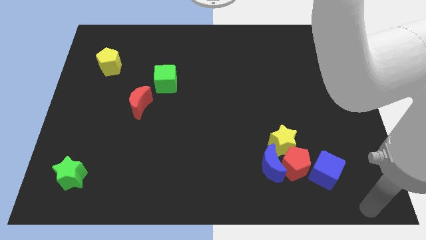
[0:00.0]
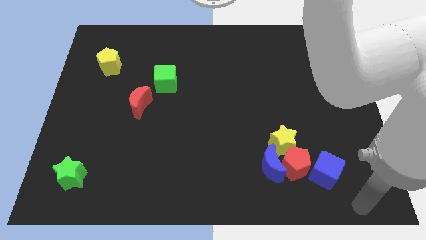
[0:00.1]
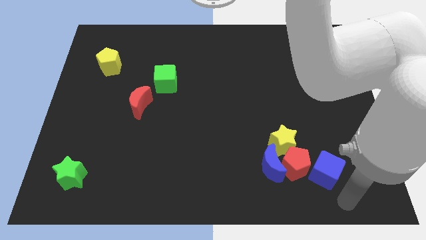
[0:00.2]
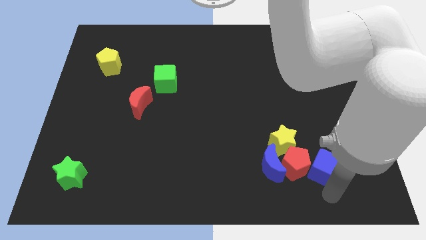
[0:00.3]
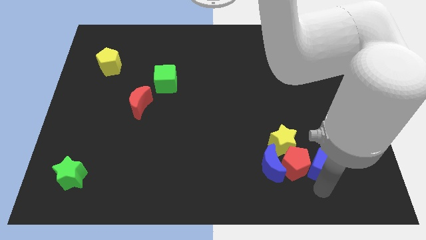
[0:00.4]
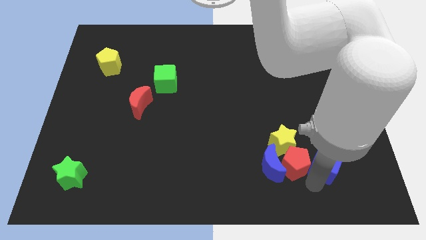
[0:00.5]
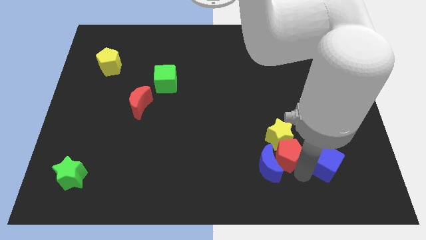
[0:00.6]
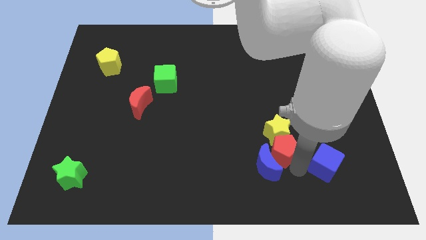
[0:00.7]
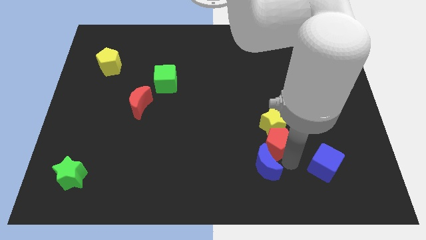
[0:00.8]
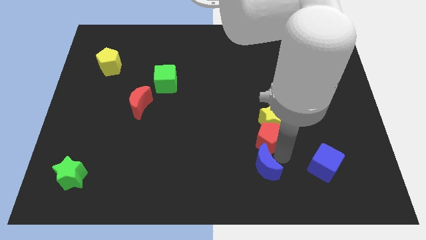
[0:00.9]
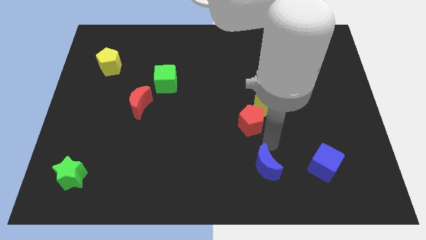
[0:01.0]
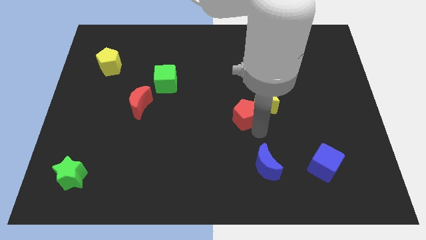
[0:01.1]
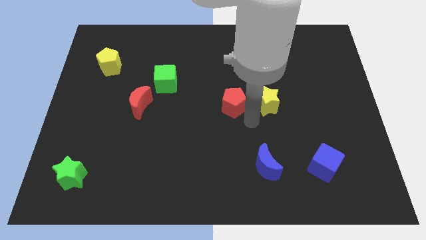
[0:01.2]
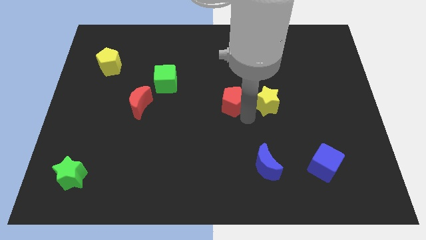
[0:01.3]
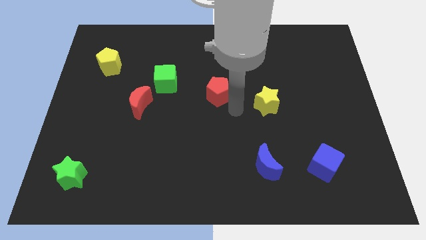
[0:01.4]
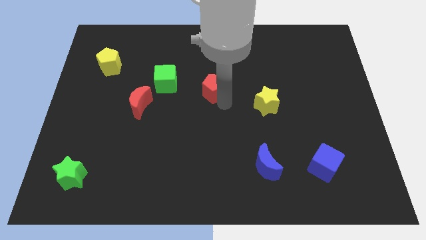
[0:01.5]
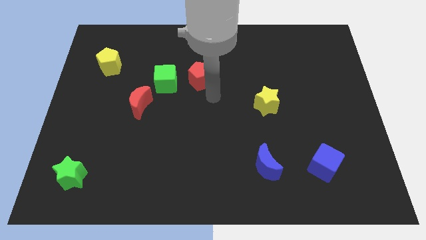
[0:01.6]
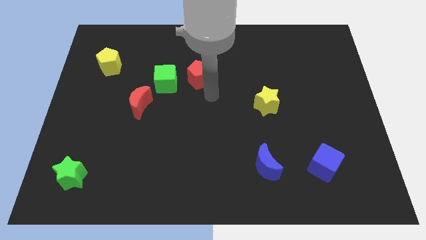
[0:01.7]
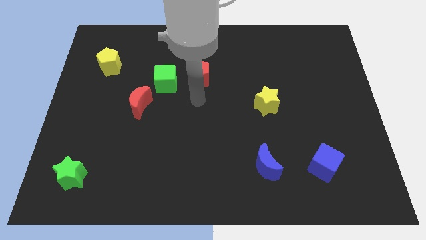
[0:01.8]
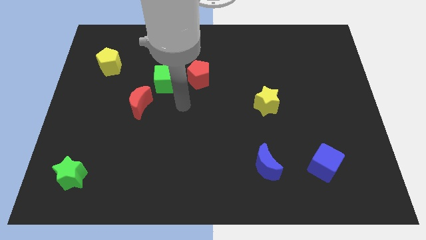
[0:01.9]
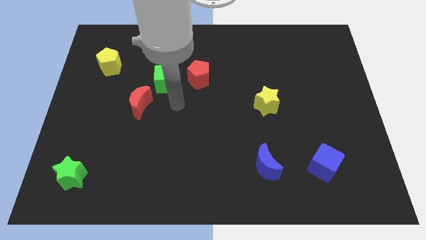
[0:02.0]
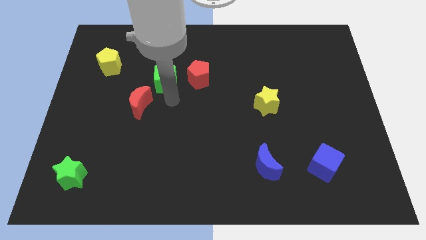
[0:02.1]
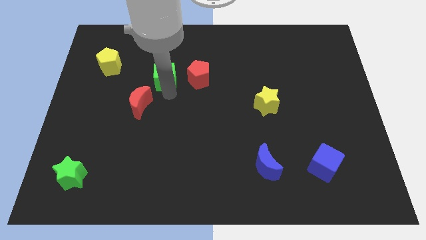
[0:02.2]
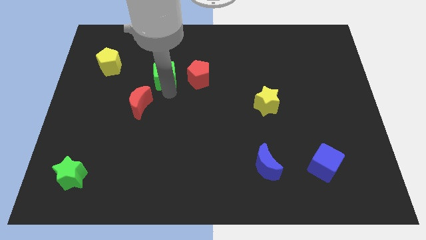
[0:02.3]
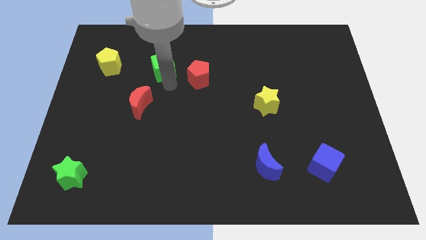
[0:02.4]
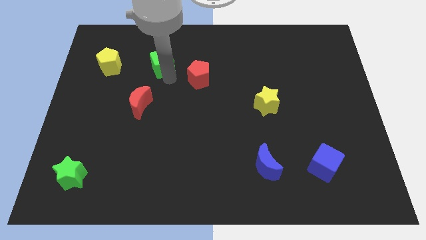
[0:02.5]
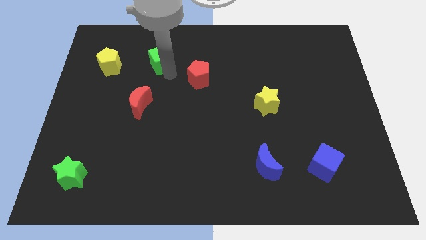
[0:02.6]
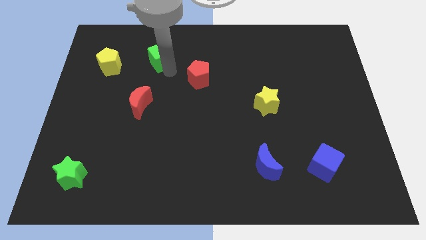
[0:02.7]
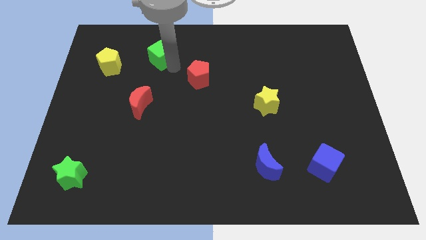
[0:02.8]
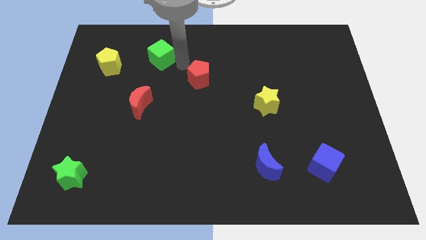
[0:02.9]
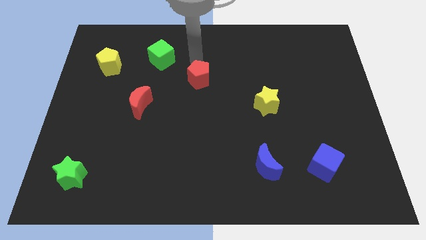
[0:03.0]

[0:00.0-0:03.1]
separate the yellowstar and red pentagon from the blue blocks

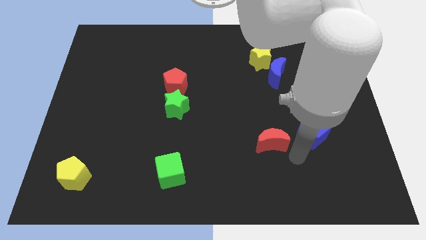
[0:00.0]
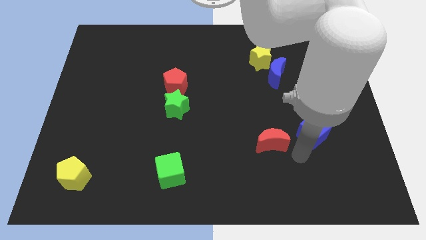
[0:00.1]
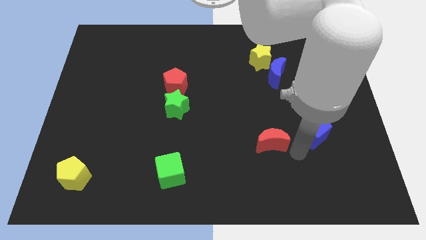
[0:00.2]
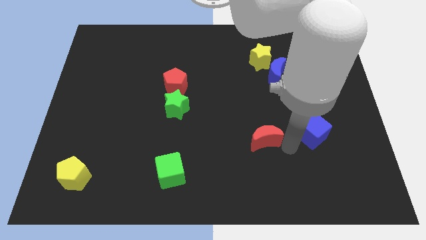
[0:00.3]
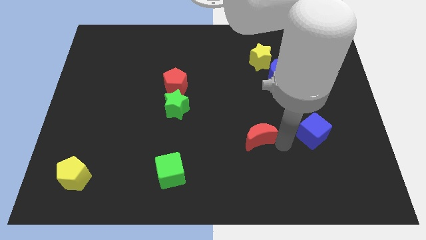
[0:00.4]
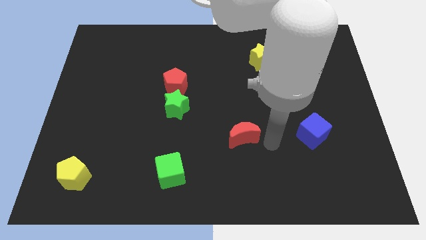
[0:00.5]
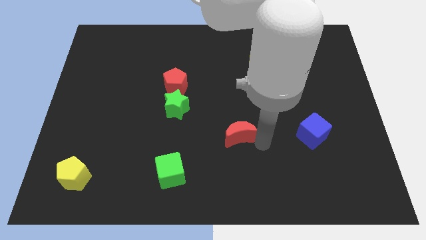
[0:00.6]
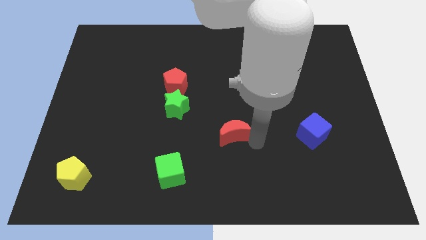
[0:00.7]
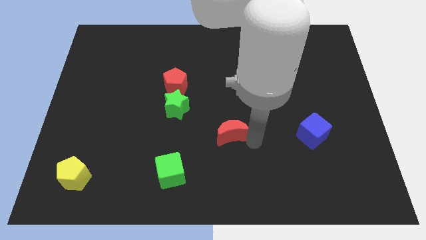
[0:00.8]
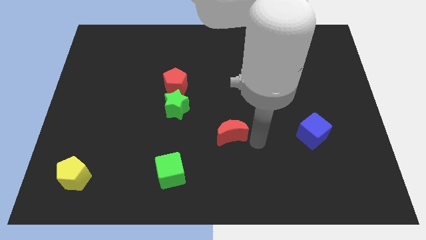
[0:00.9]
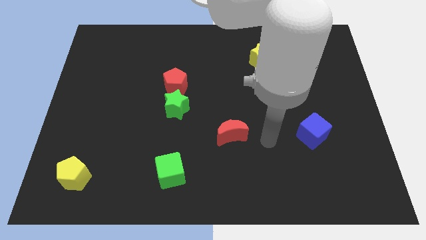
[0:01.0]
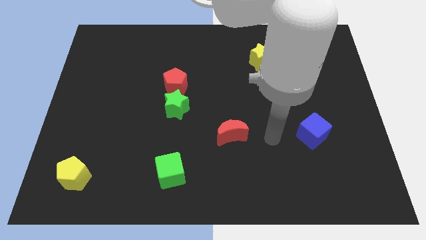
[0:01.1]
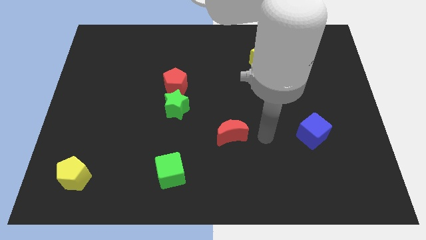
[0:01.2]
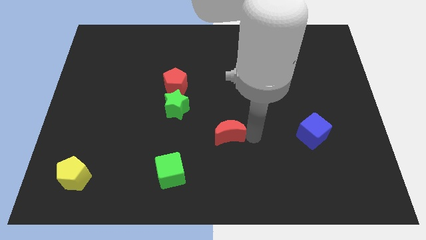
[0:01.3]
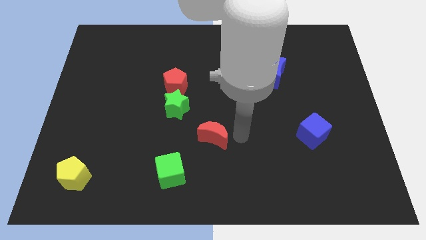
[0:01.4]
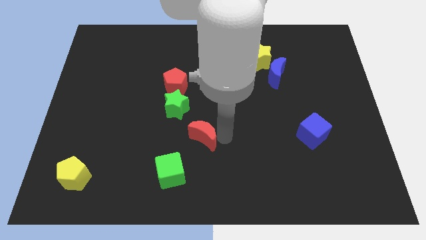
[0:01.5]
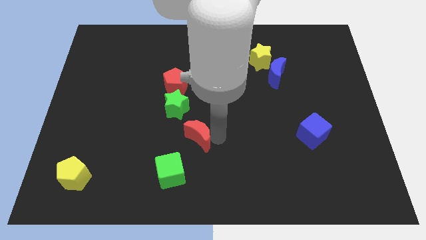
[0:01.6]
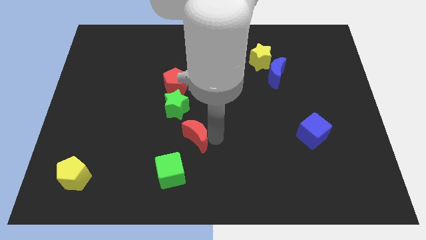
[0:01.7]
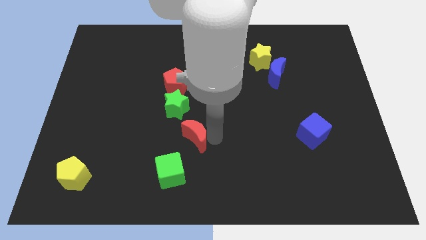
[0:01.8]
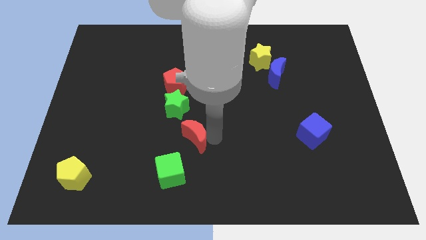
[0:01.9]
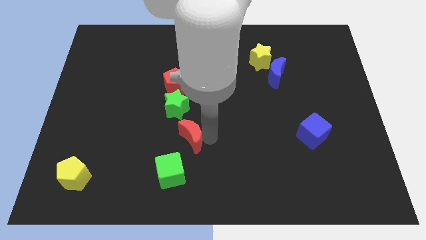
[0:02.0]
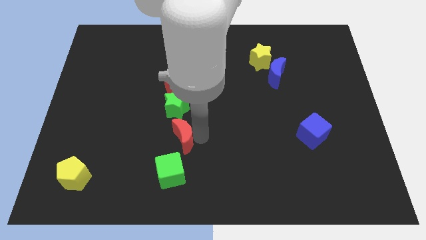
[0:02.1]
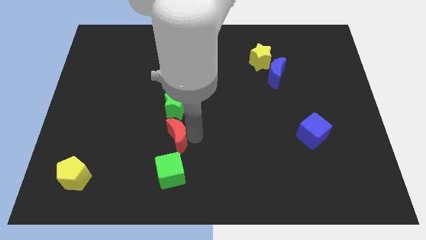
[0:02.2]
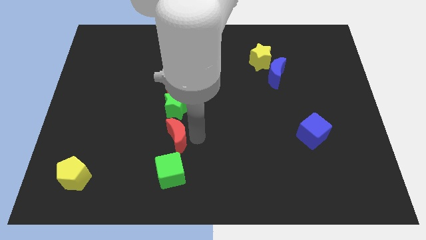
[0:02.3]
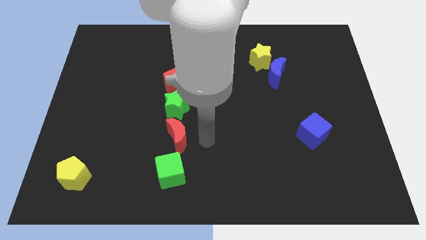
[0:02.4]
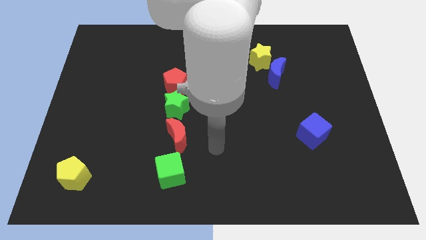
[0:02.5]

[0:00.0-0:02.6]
move the red moon between green blocks

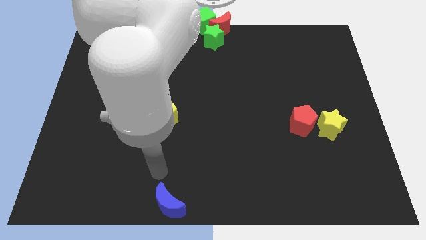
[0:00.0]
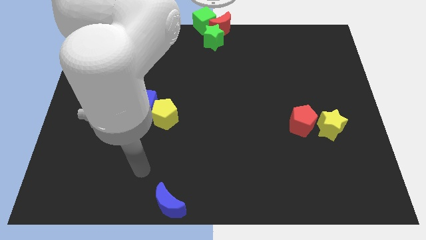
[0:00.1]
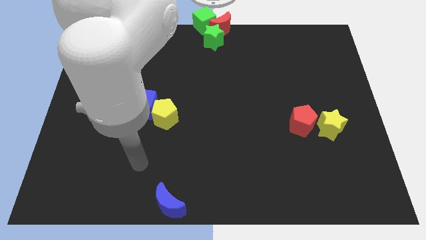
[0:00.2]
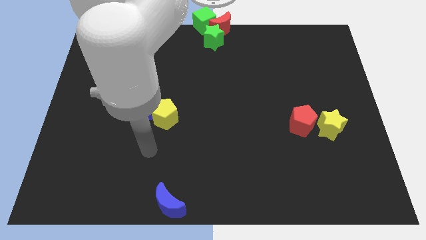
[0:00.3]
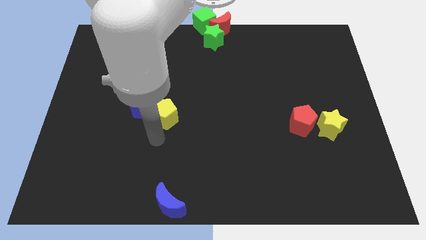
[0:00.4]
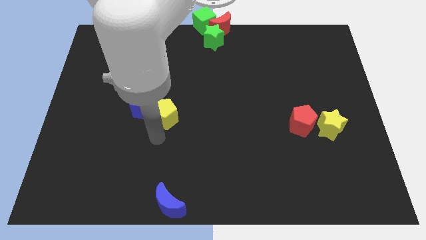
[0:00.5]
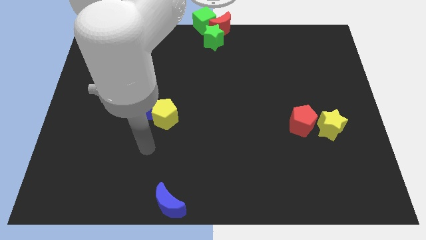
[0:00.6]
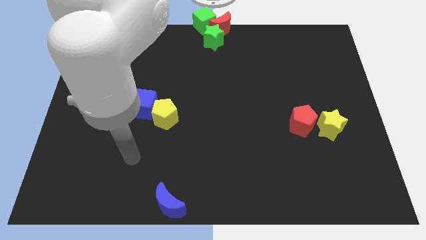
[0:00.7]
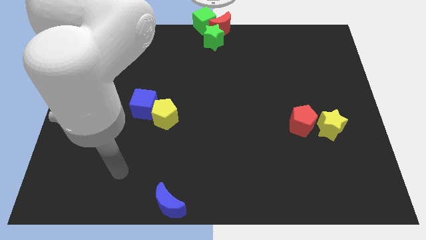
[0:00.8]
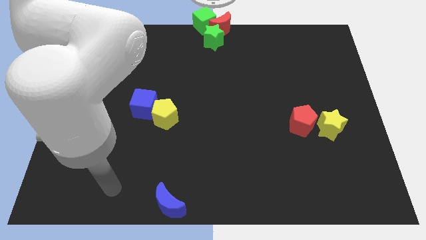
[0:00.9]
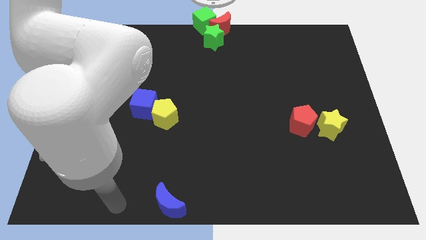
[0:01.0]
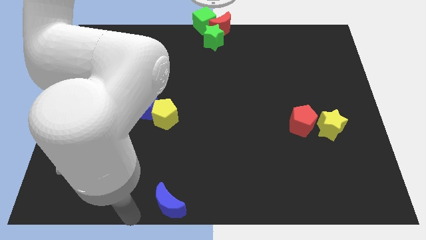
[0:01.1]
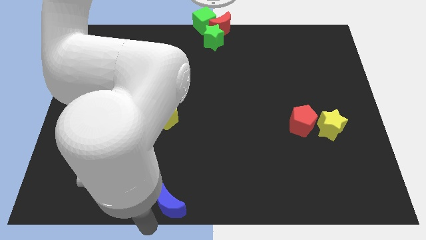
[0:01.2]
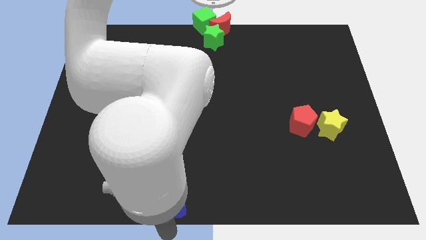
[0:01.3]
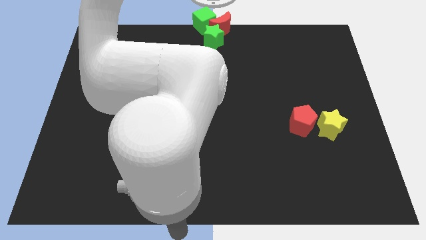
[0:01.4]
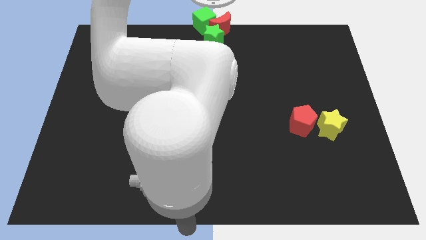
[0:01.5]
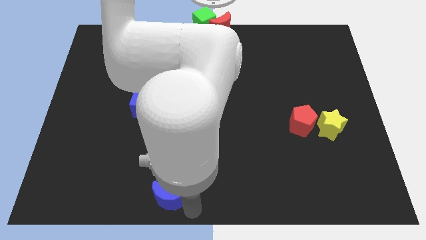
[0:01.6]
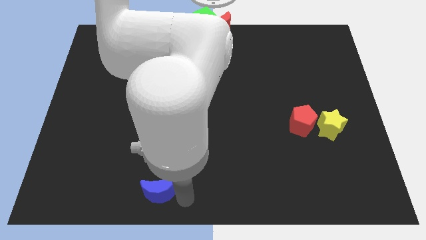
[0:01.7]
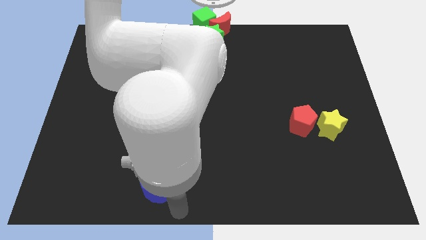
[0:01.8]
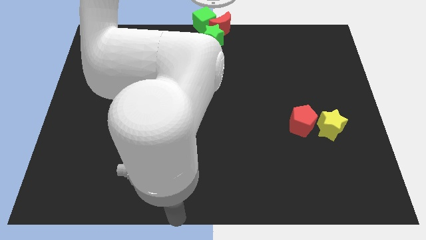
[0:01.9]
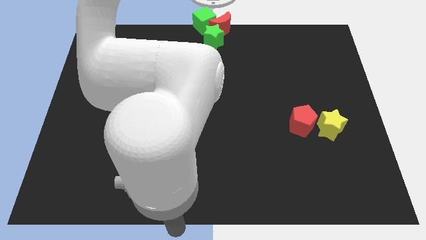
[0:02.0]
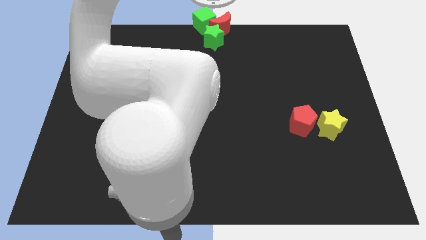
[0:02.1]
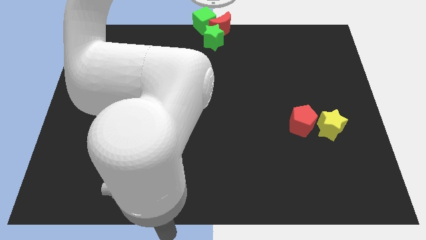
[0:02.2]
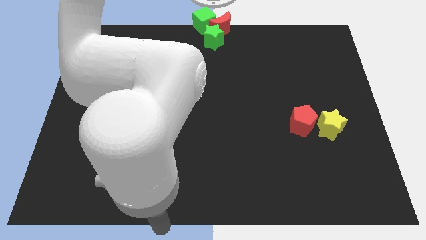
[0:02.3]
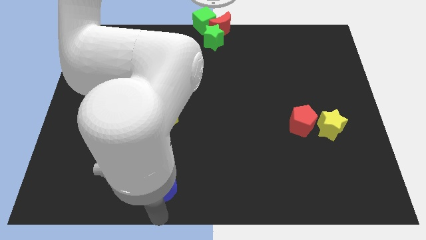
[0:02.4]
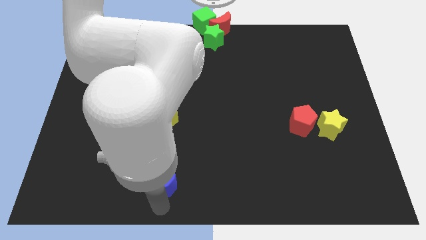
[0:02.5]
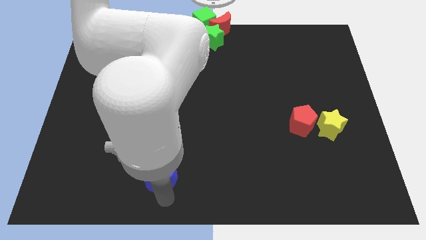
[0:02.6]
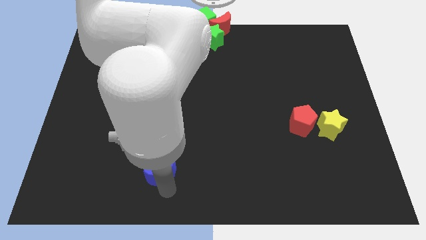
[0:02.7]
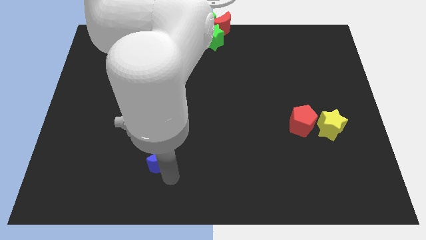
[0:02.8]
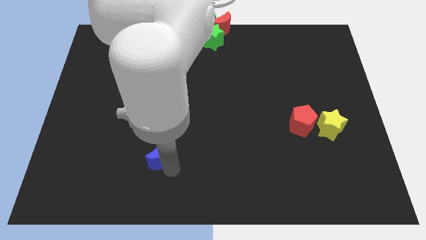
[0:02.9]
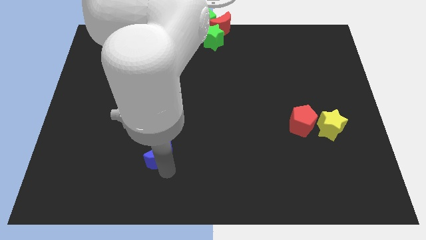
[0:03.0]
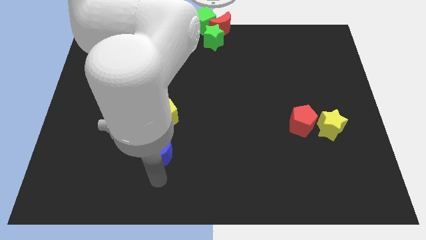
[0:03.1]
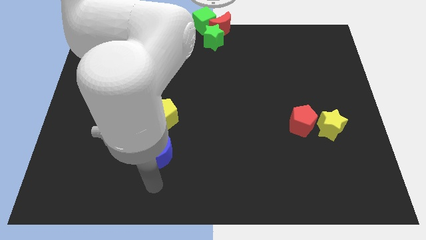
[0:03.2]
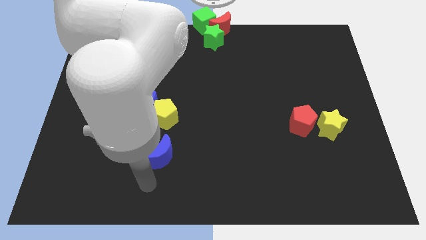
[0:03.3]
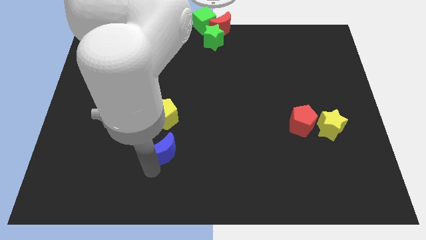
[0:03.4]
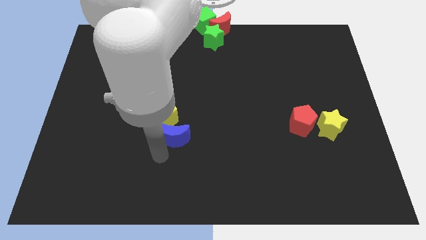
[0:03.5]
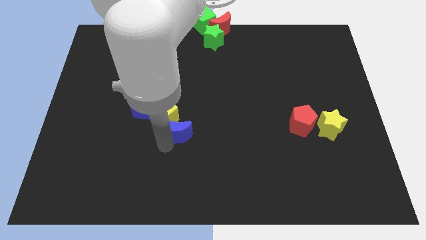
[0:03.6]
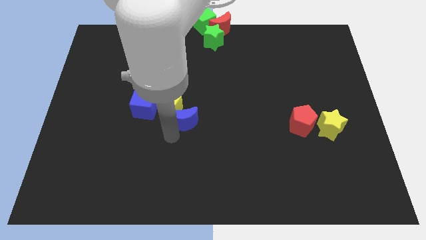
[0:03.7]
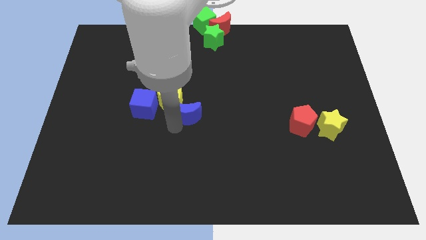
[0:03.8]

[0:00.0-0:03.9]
push the blue crescent into the yellow pentagon
